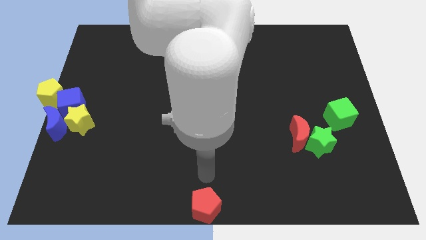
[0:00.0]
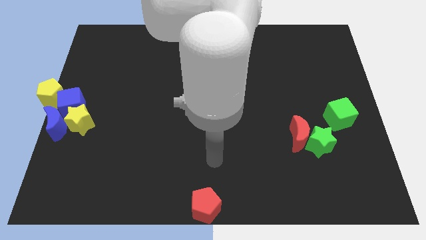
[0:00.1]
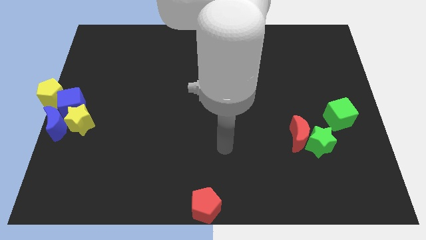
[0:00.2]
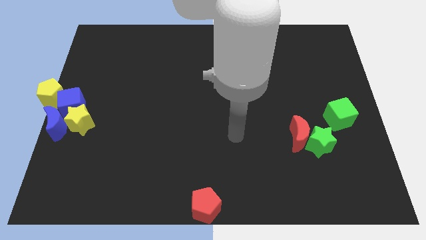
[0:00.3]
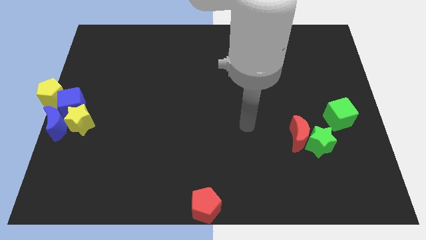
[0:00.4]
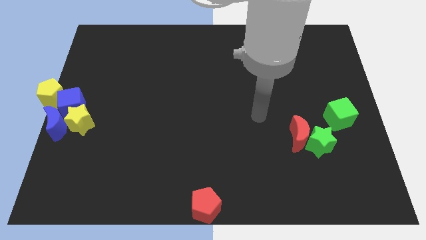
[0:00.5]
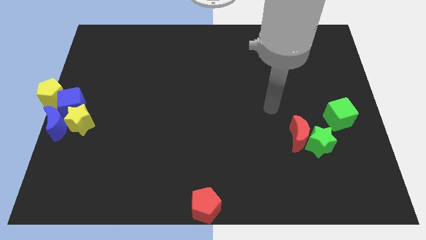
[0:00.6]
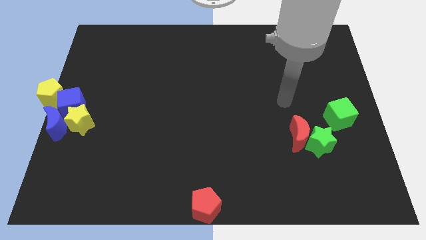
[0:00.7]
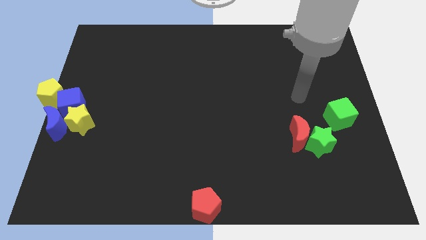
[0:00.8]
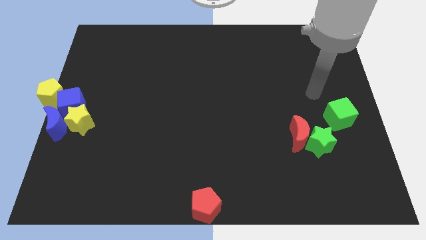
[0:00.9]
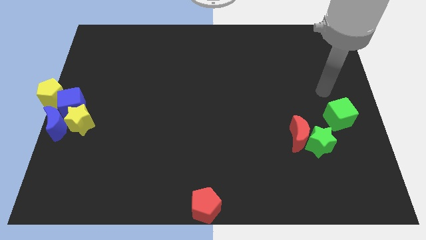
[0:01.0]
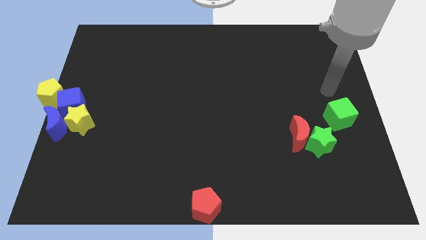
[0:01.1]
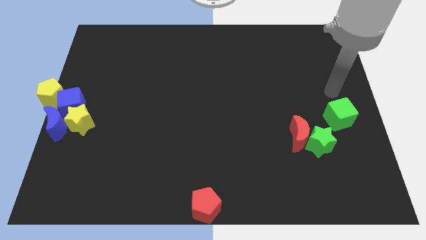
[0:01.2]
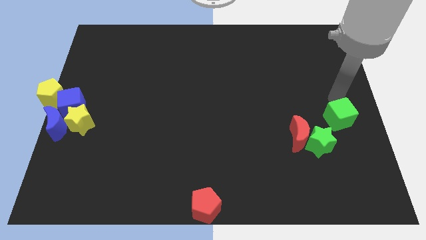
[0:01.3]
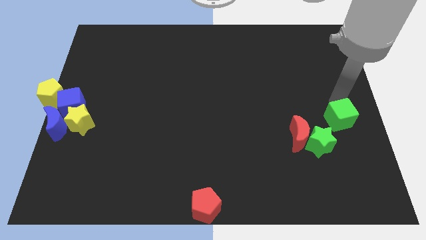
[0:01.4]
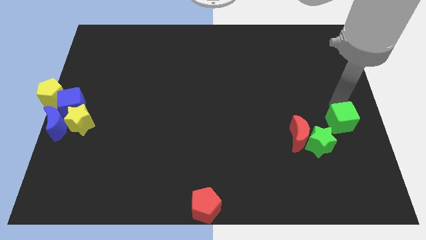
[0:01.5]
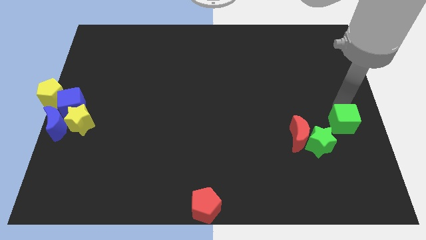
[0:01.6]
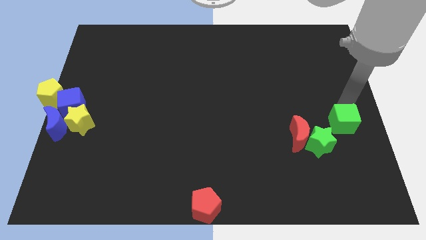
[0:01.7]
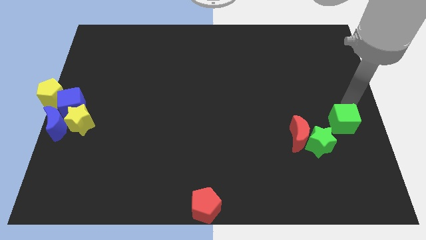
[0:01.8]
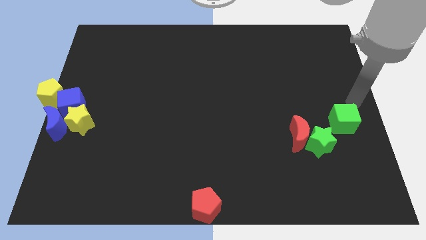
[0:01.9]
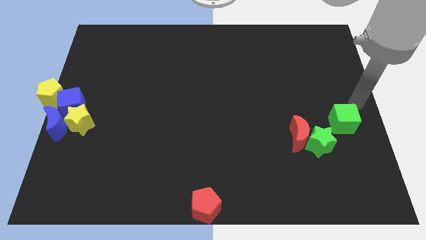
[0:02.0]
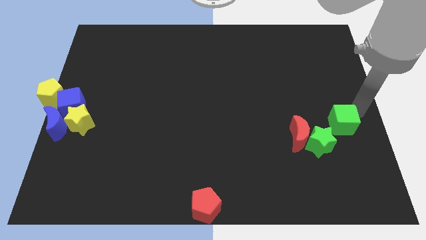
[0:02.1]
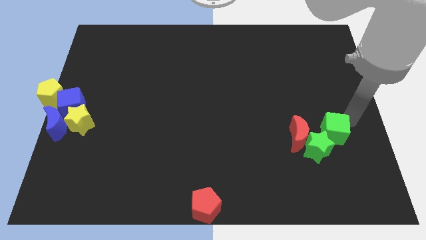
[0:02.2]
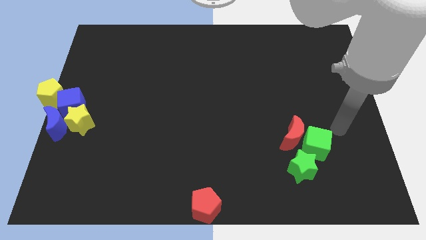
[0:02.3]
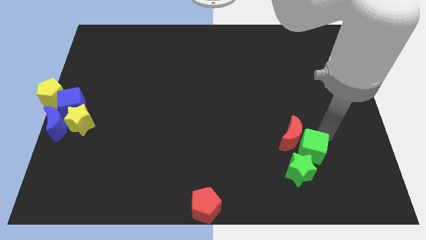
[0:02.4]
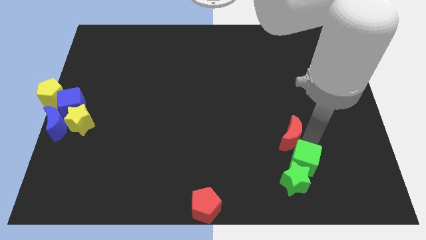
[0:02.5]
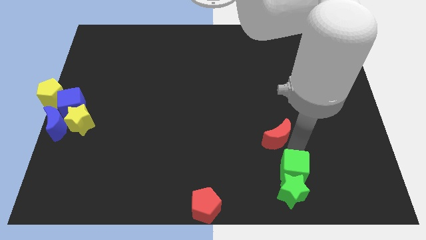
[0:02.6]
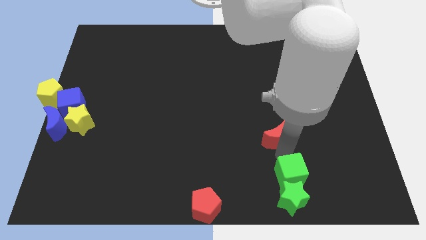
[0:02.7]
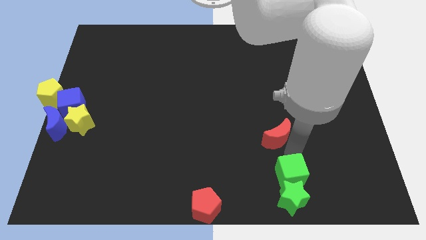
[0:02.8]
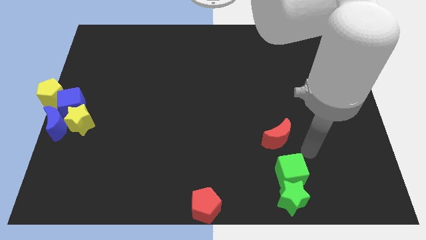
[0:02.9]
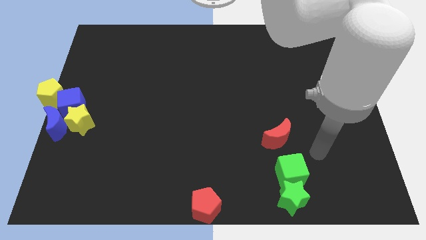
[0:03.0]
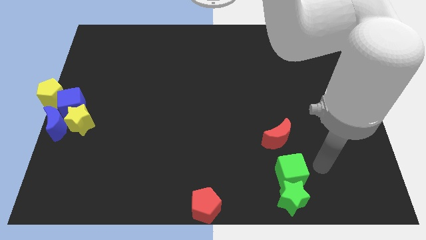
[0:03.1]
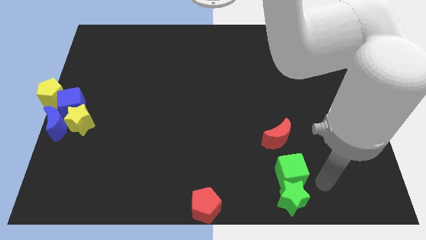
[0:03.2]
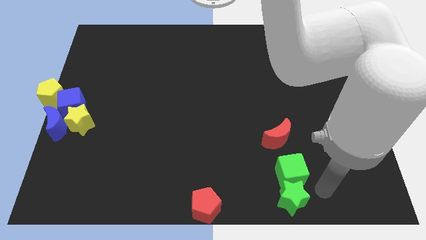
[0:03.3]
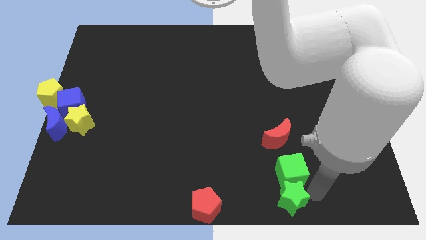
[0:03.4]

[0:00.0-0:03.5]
place green cube and green star vertically below the red moon

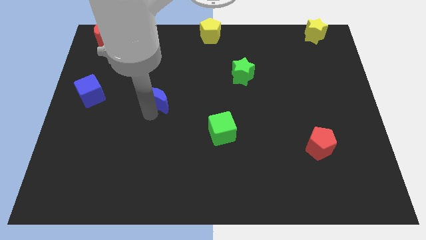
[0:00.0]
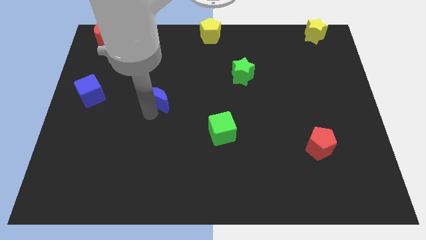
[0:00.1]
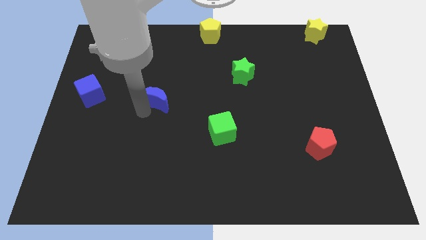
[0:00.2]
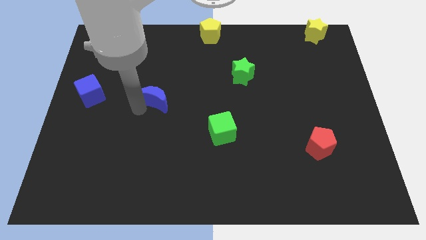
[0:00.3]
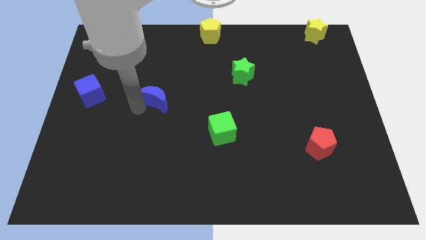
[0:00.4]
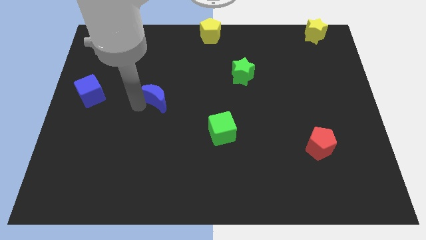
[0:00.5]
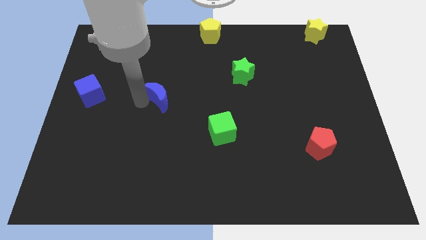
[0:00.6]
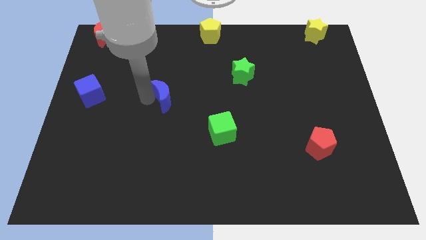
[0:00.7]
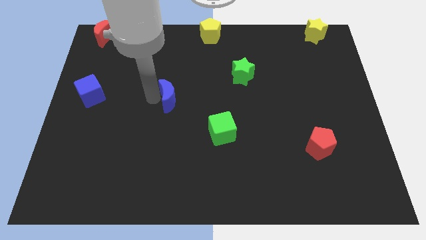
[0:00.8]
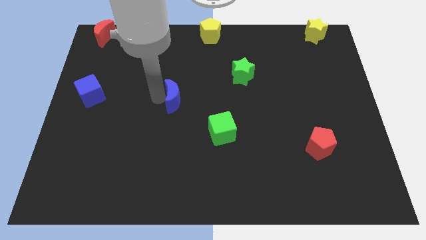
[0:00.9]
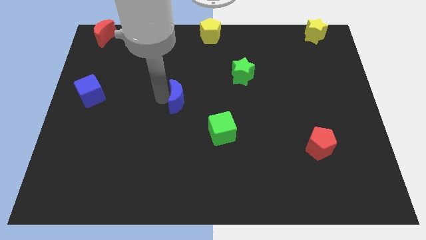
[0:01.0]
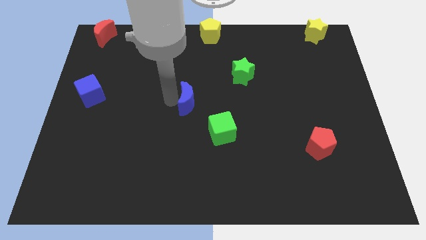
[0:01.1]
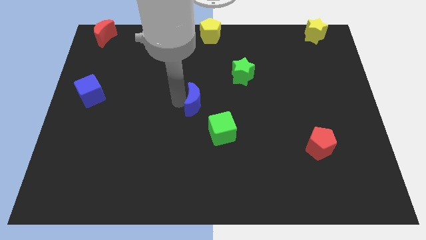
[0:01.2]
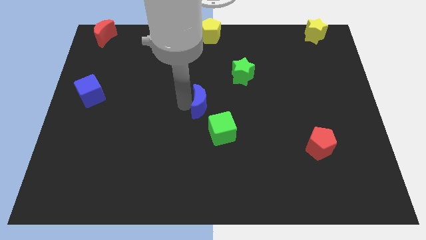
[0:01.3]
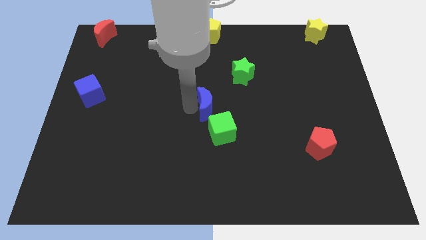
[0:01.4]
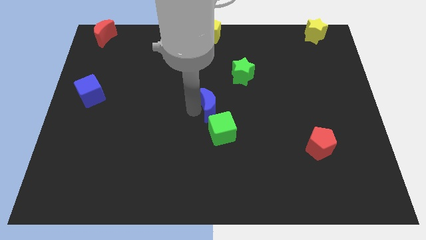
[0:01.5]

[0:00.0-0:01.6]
place the blue crescent at the center of the board

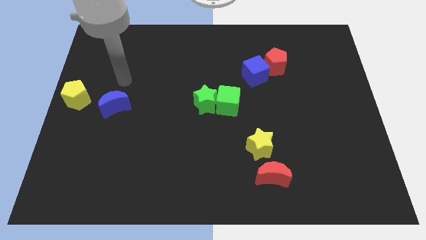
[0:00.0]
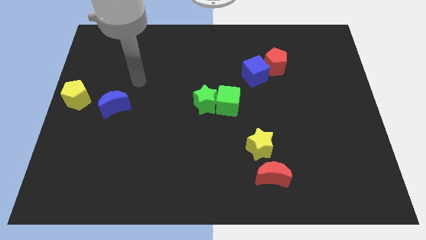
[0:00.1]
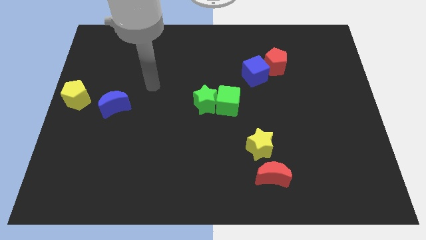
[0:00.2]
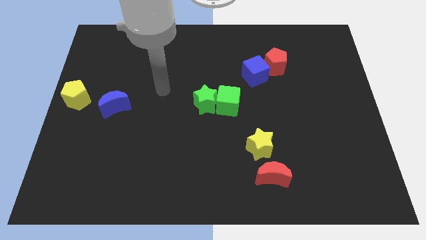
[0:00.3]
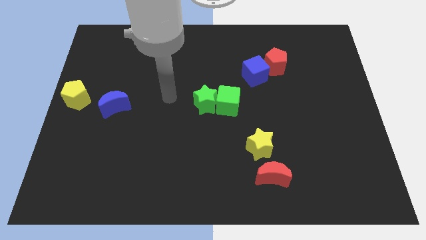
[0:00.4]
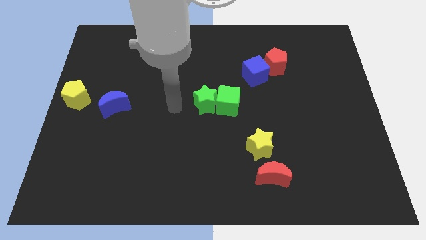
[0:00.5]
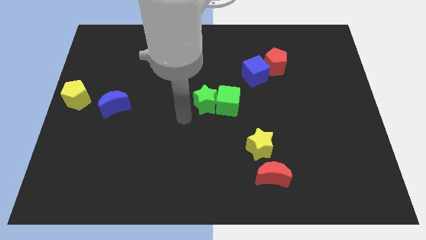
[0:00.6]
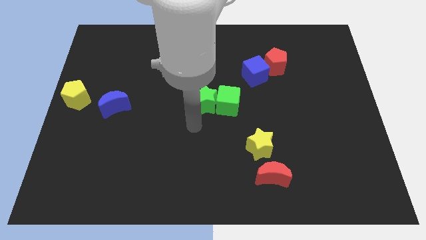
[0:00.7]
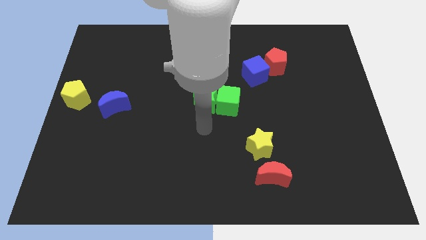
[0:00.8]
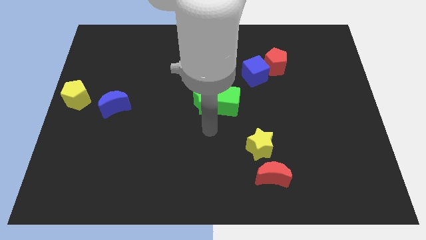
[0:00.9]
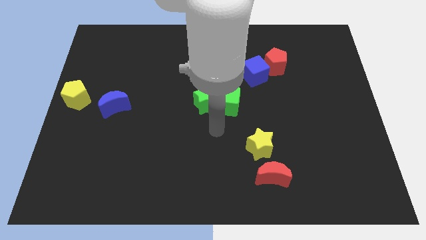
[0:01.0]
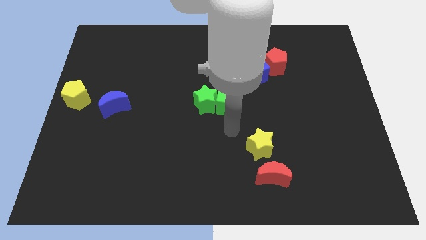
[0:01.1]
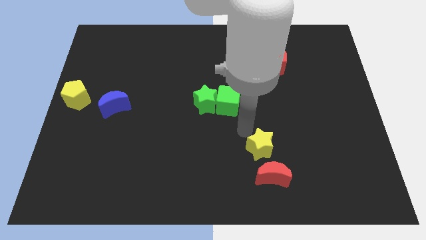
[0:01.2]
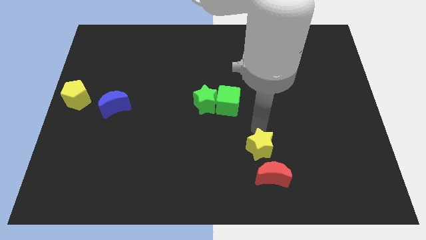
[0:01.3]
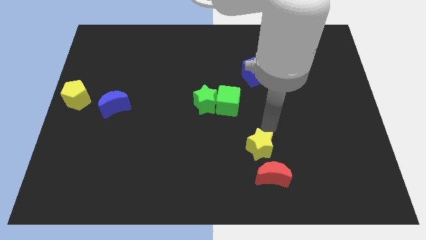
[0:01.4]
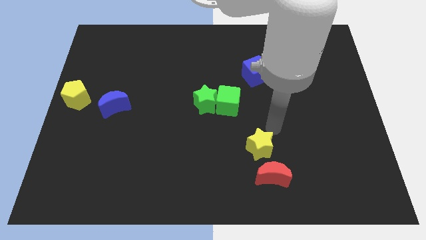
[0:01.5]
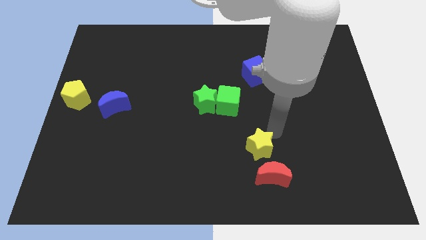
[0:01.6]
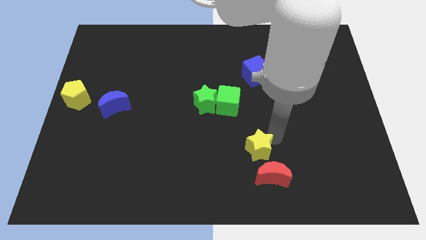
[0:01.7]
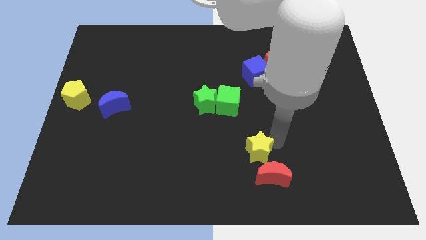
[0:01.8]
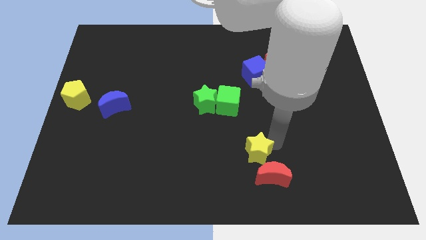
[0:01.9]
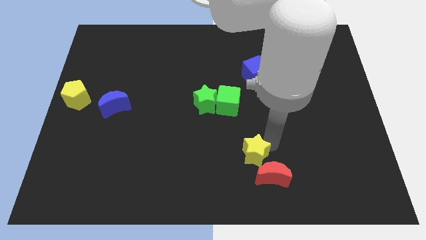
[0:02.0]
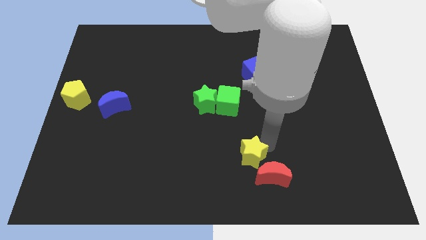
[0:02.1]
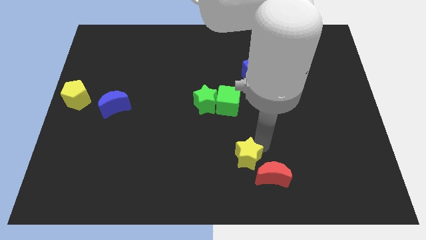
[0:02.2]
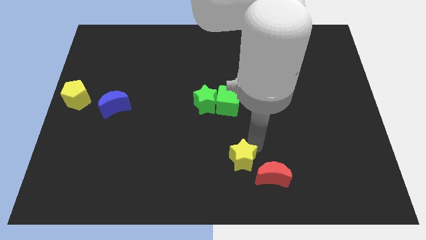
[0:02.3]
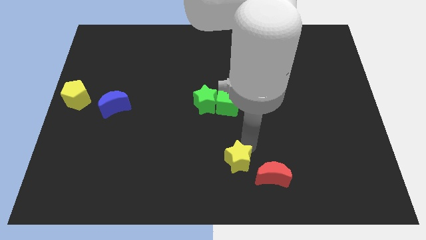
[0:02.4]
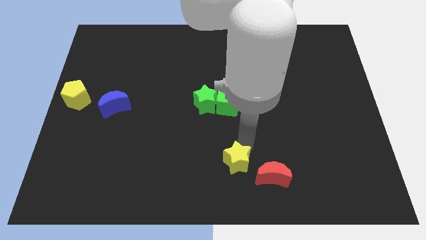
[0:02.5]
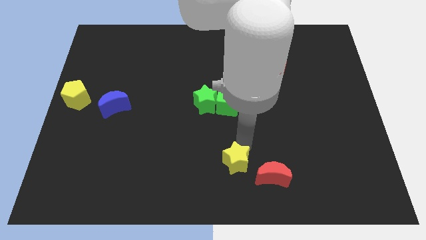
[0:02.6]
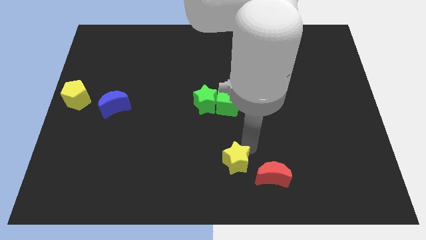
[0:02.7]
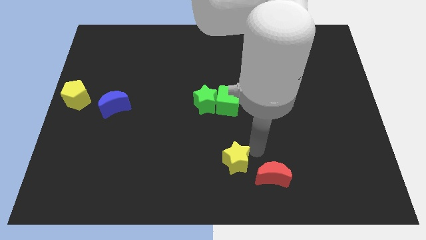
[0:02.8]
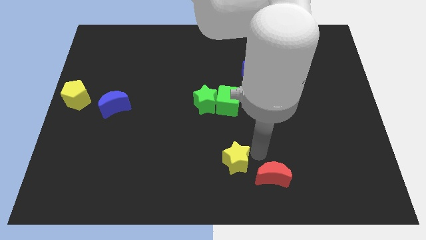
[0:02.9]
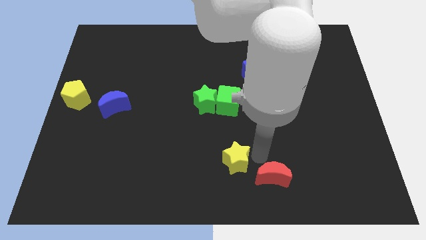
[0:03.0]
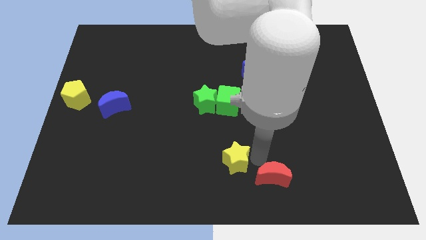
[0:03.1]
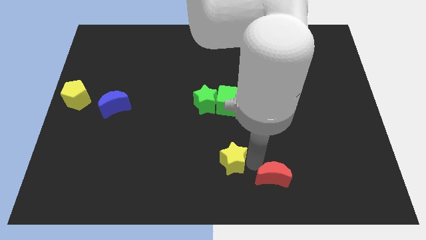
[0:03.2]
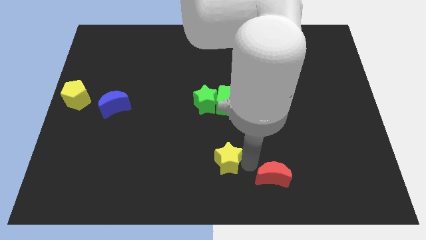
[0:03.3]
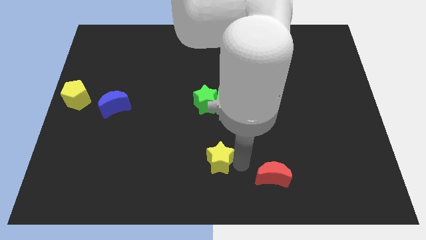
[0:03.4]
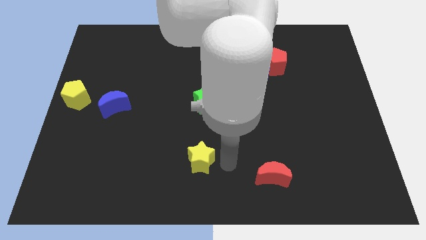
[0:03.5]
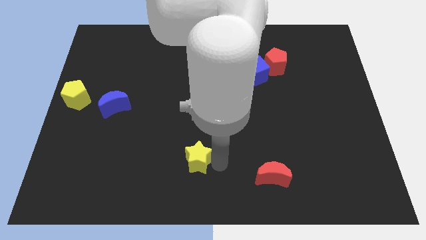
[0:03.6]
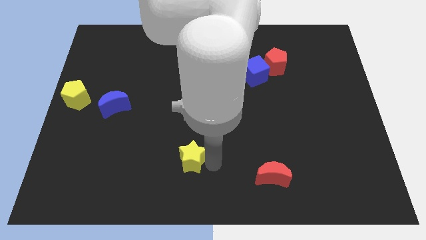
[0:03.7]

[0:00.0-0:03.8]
place the yellow star to the left side of the red crescent

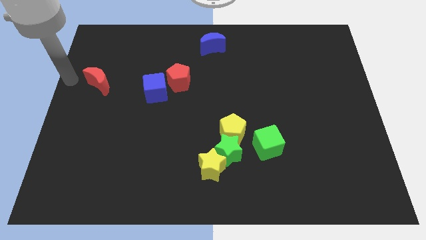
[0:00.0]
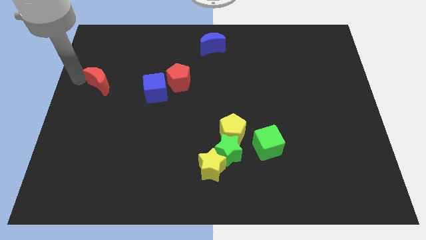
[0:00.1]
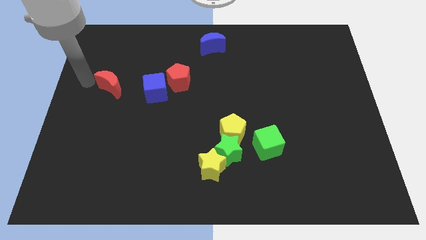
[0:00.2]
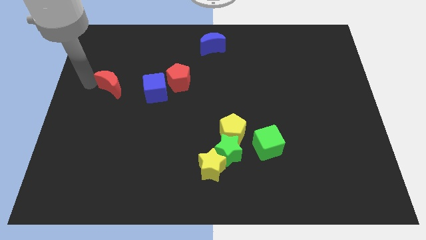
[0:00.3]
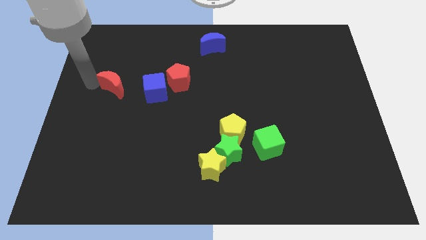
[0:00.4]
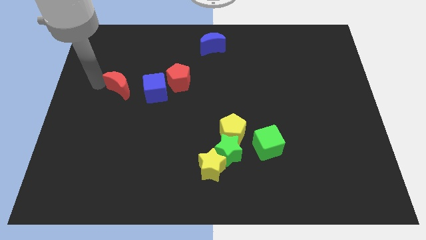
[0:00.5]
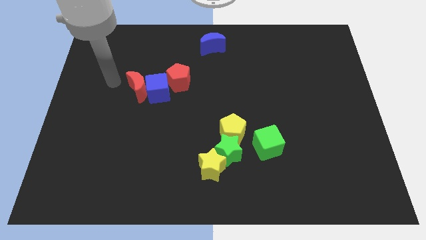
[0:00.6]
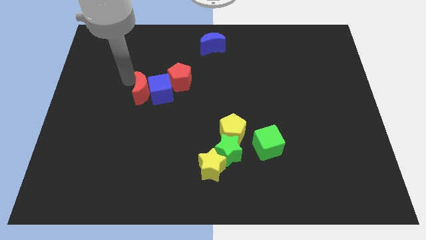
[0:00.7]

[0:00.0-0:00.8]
place red crescent near blue cube
